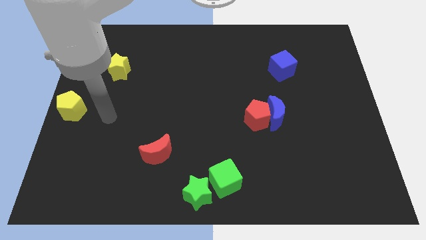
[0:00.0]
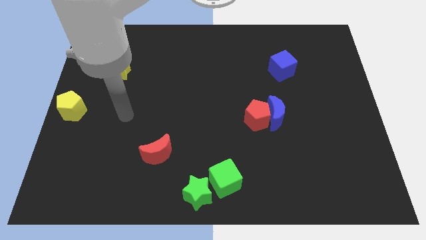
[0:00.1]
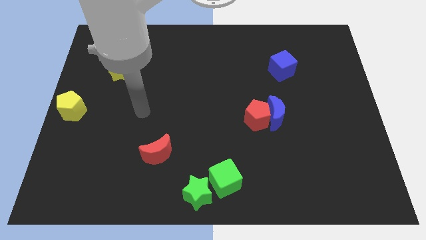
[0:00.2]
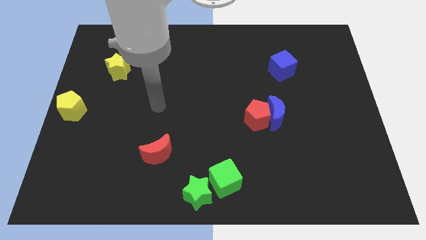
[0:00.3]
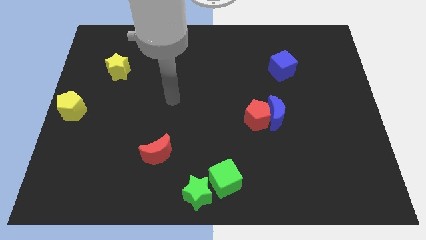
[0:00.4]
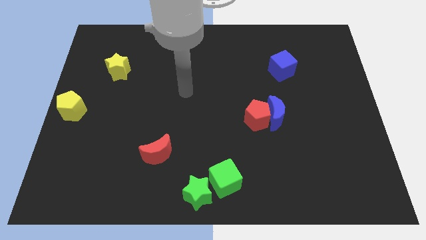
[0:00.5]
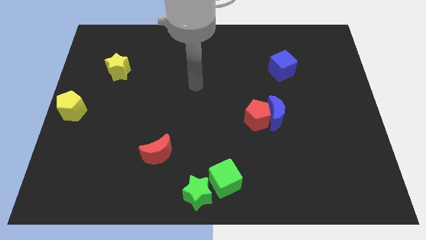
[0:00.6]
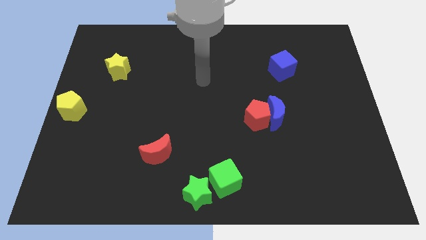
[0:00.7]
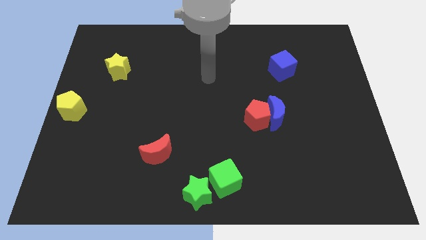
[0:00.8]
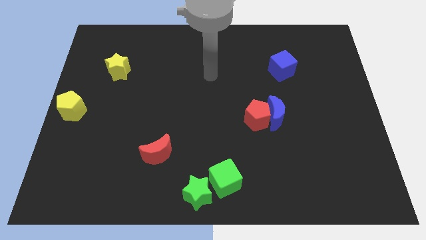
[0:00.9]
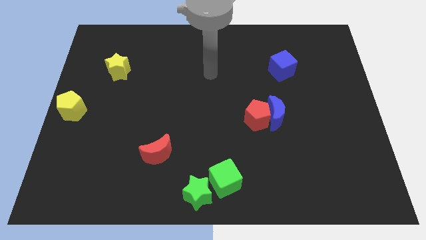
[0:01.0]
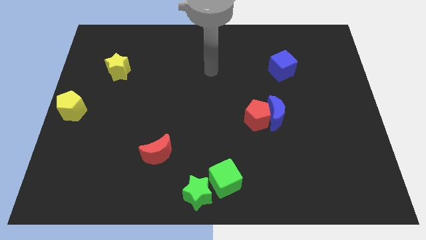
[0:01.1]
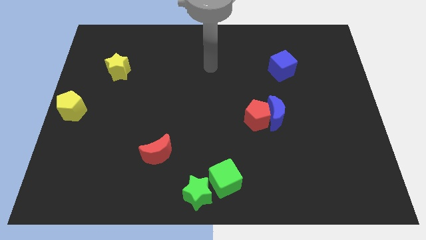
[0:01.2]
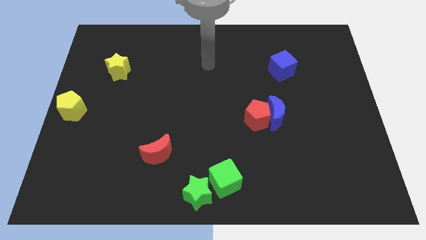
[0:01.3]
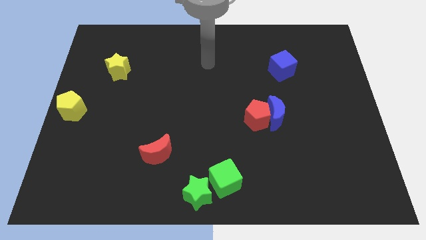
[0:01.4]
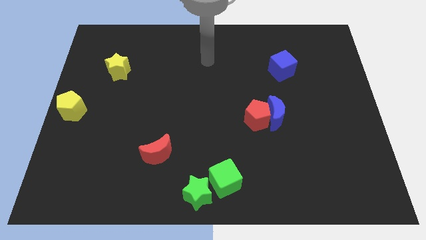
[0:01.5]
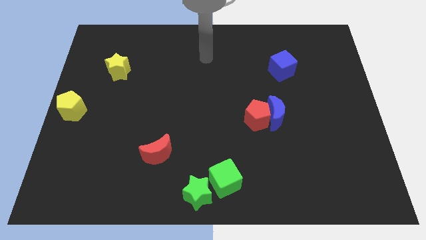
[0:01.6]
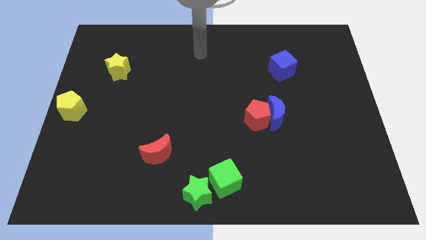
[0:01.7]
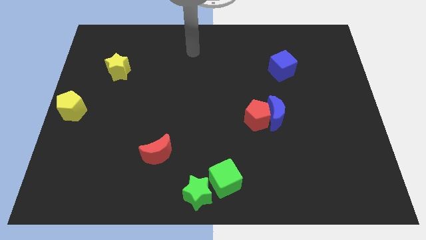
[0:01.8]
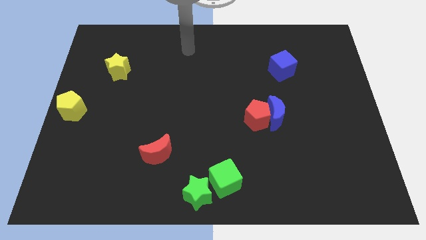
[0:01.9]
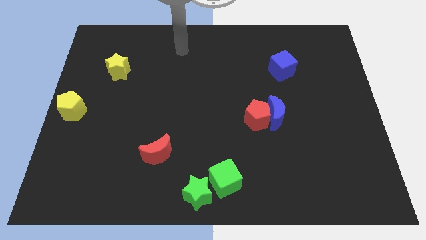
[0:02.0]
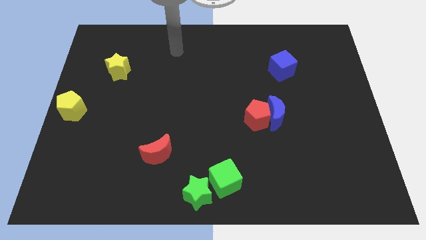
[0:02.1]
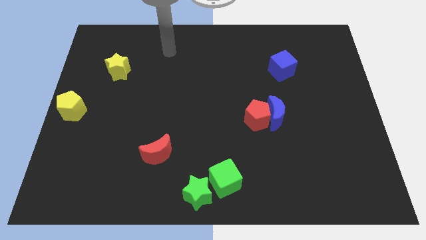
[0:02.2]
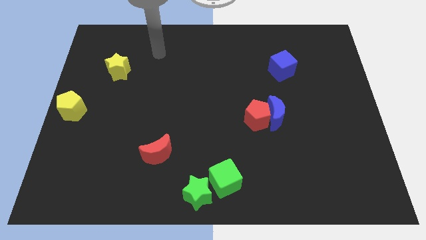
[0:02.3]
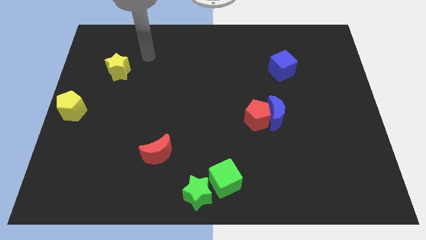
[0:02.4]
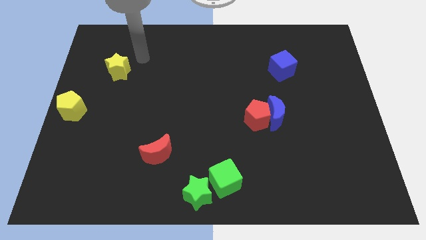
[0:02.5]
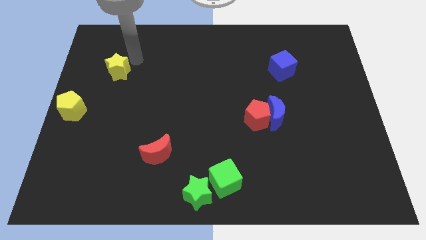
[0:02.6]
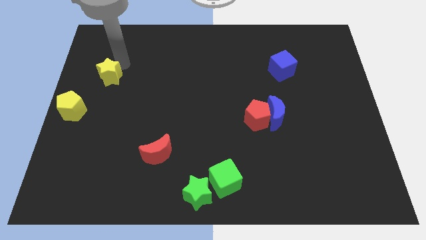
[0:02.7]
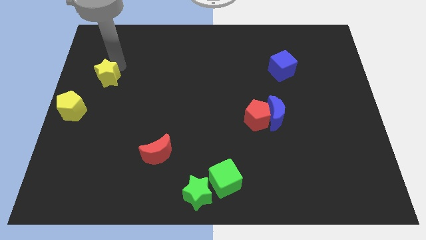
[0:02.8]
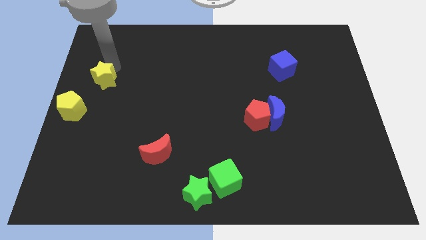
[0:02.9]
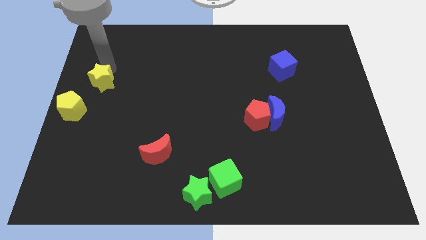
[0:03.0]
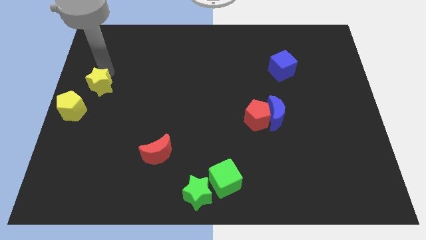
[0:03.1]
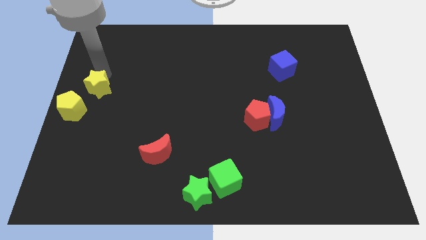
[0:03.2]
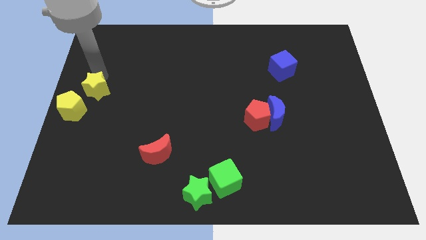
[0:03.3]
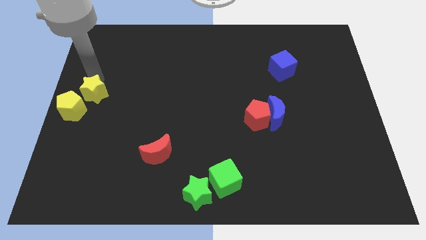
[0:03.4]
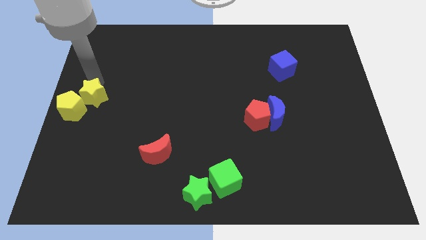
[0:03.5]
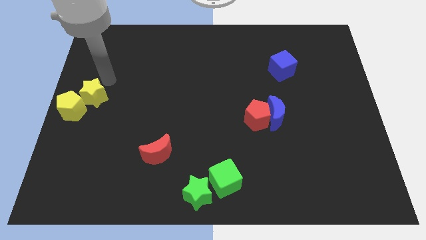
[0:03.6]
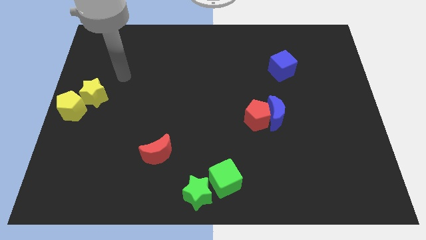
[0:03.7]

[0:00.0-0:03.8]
slide the yellow star close to the top right side of the yellow pentagon

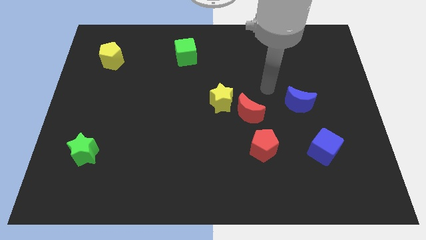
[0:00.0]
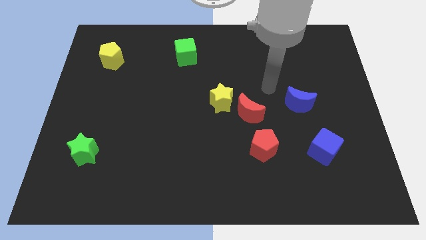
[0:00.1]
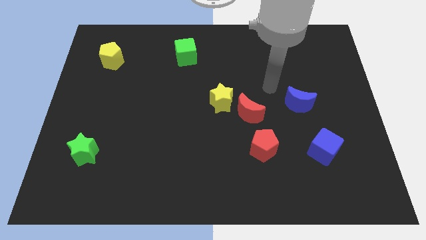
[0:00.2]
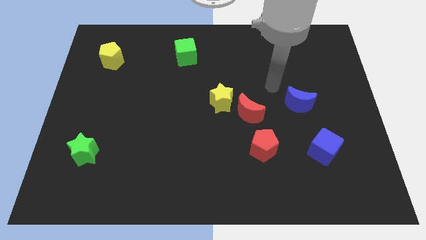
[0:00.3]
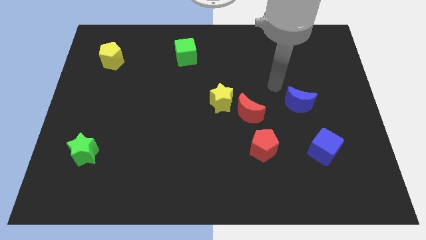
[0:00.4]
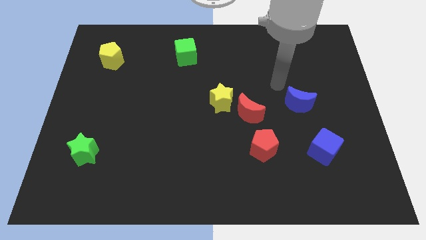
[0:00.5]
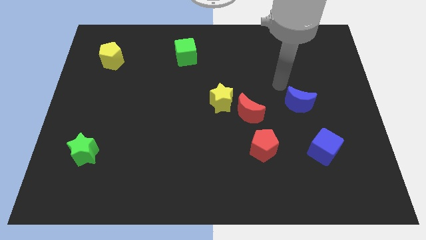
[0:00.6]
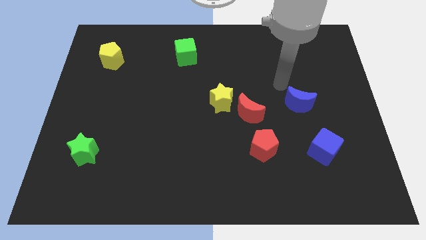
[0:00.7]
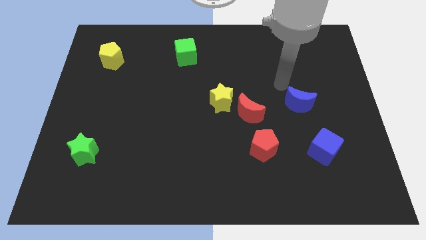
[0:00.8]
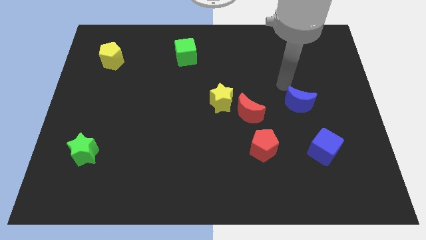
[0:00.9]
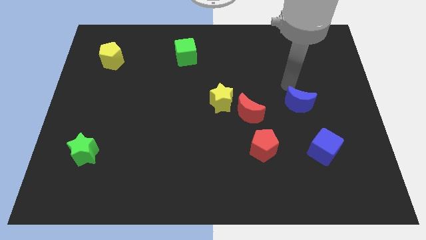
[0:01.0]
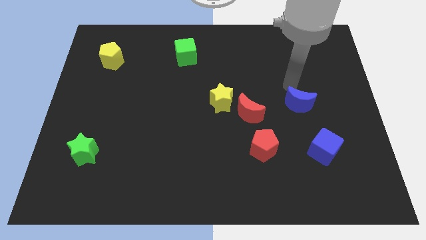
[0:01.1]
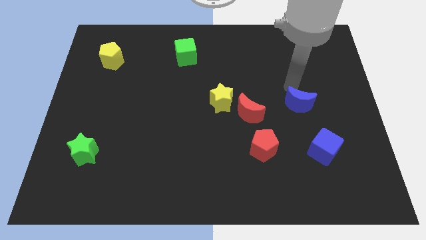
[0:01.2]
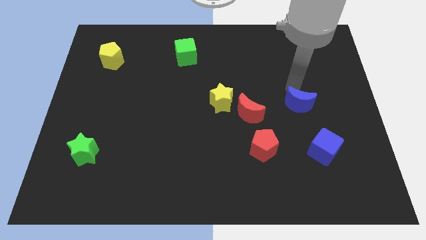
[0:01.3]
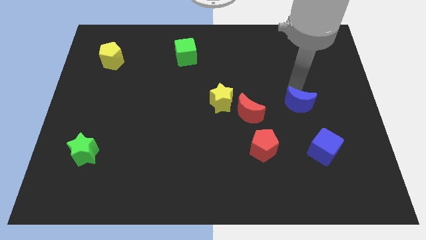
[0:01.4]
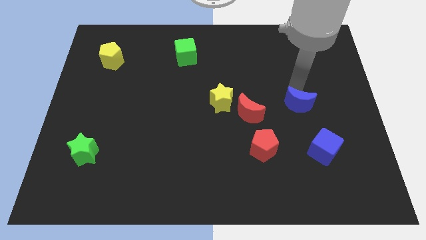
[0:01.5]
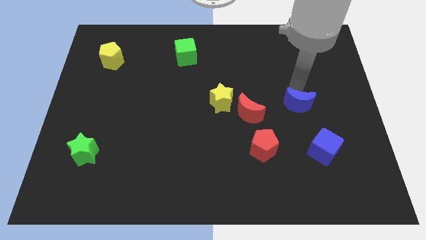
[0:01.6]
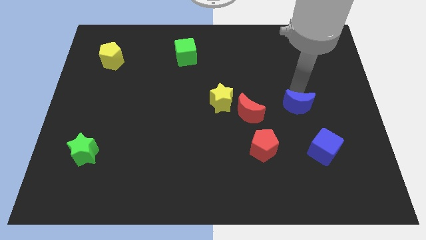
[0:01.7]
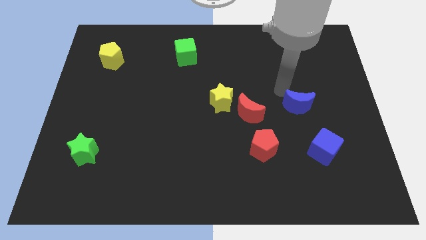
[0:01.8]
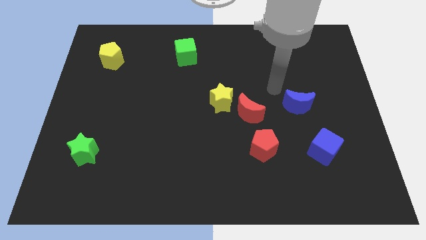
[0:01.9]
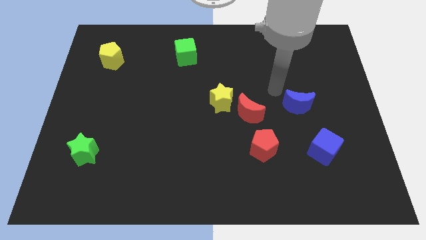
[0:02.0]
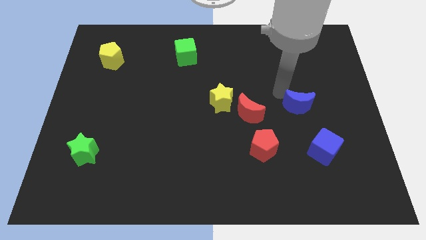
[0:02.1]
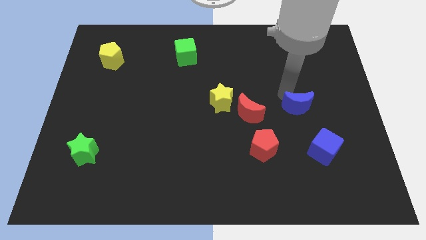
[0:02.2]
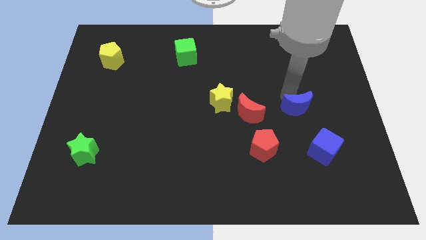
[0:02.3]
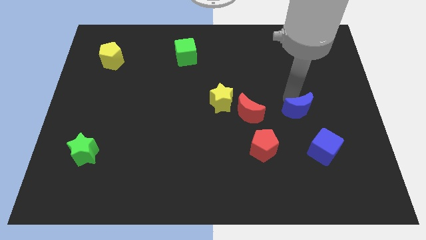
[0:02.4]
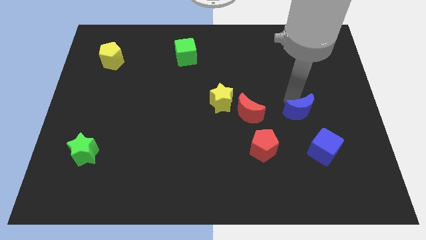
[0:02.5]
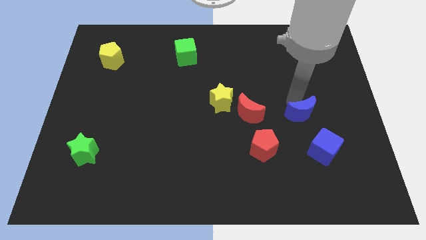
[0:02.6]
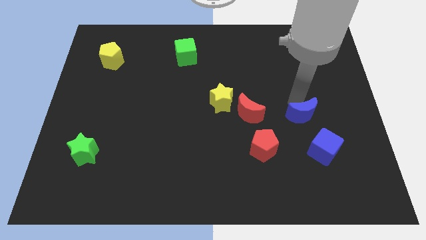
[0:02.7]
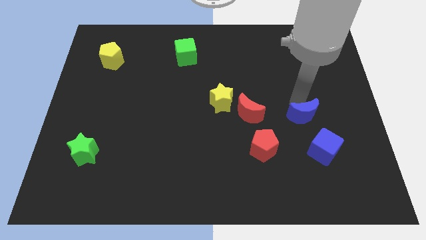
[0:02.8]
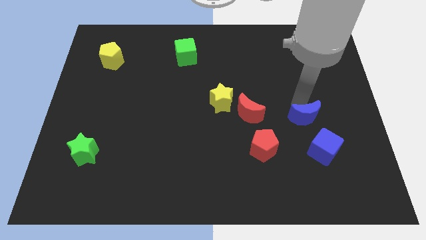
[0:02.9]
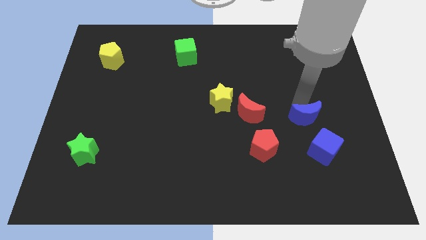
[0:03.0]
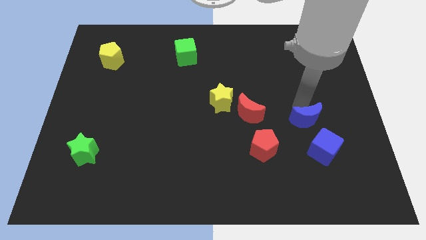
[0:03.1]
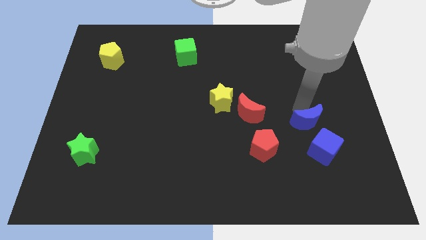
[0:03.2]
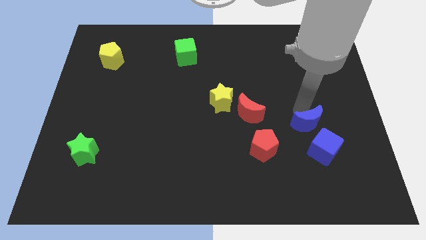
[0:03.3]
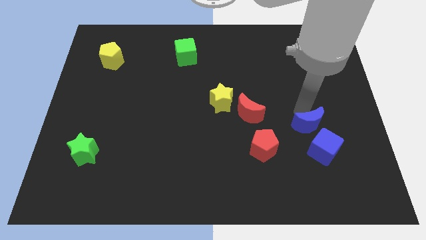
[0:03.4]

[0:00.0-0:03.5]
slide the blue moon diagonally bottom right to the red moon

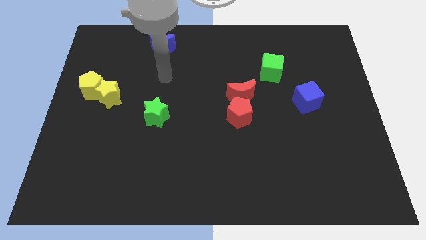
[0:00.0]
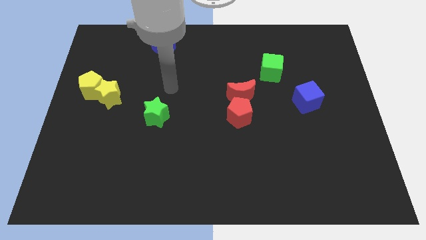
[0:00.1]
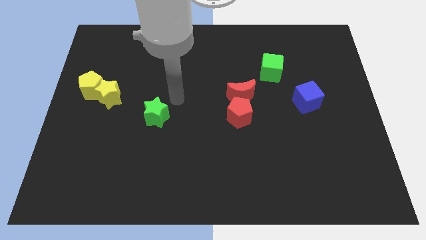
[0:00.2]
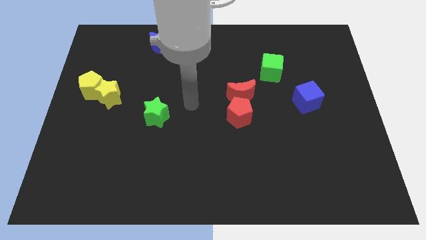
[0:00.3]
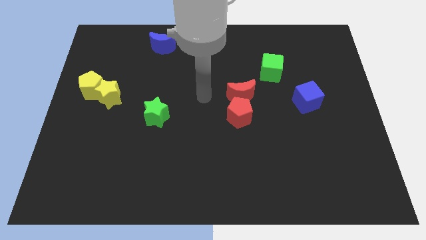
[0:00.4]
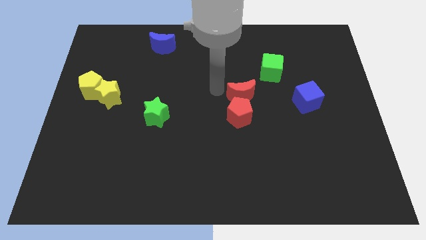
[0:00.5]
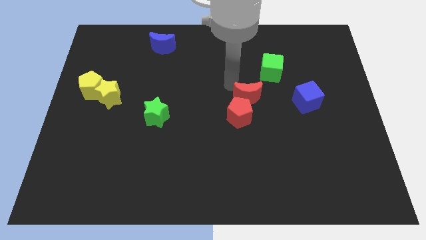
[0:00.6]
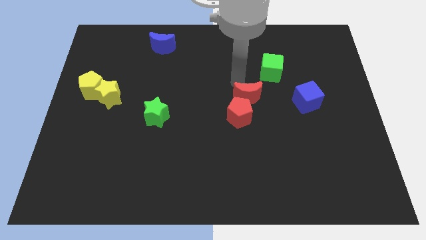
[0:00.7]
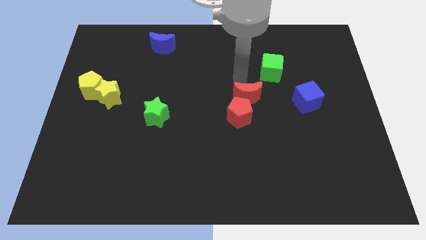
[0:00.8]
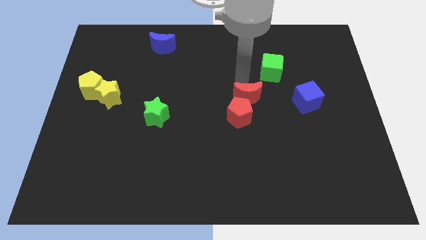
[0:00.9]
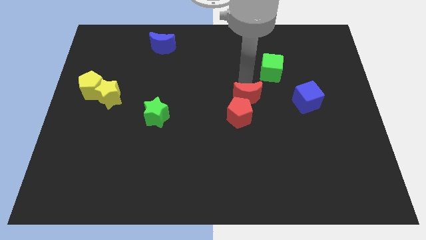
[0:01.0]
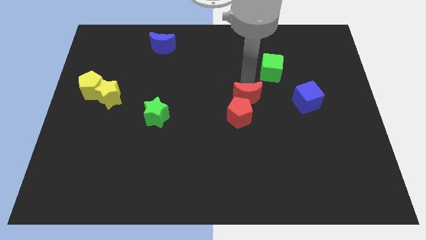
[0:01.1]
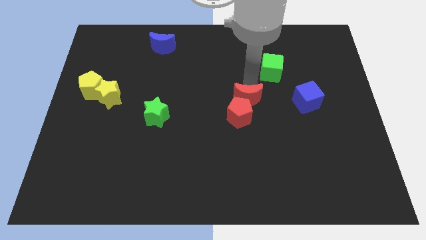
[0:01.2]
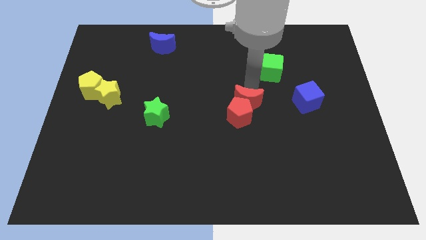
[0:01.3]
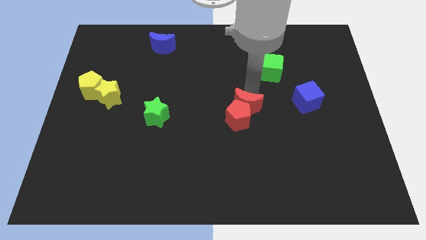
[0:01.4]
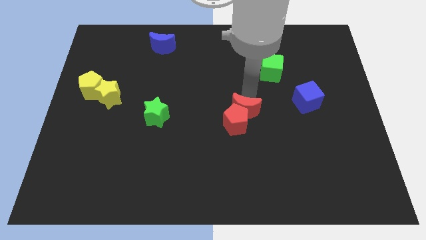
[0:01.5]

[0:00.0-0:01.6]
move the red moon into the top side of the red pentagon
